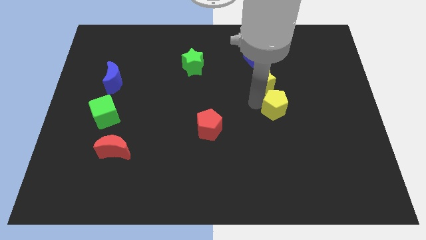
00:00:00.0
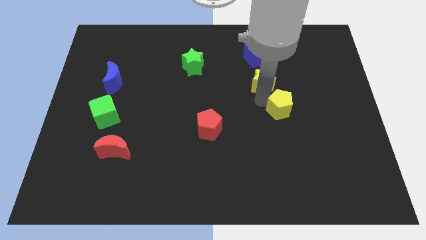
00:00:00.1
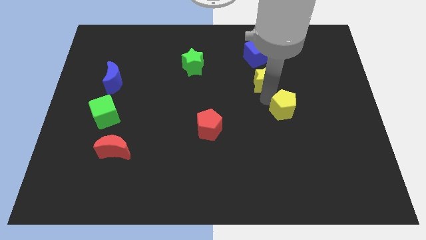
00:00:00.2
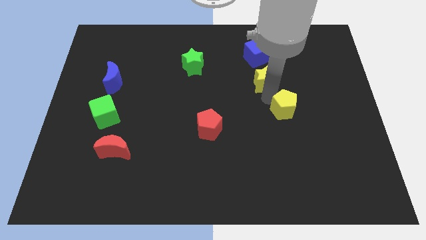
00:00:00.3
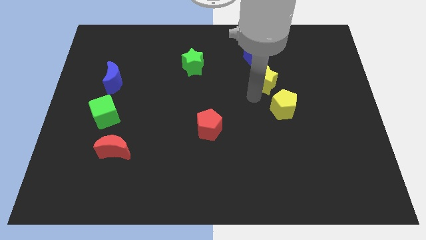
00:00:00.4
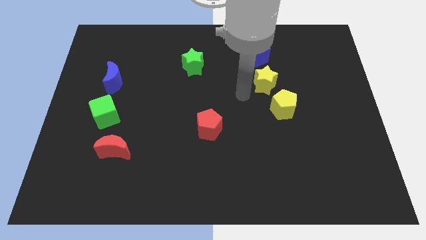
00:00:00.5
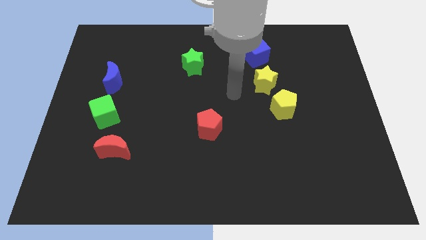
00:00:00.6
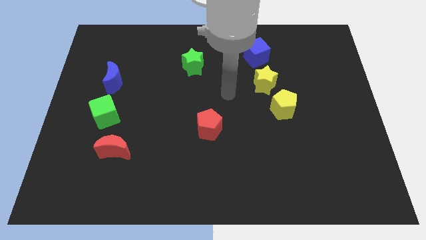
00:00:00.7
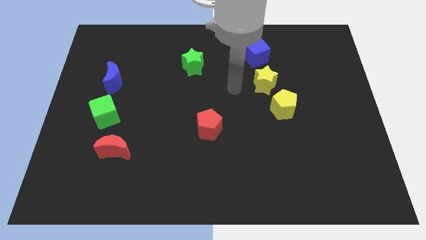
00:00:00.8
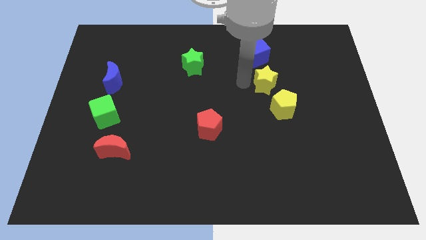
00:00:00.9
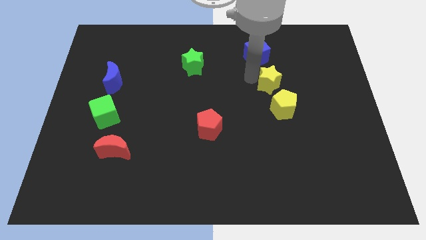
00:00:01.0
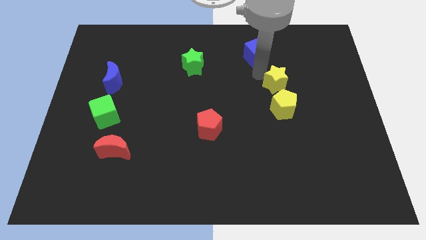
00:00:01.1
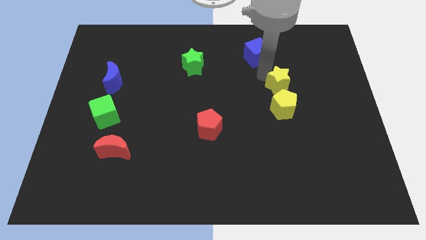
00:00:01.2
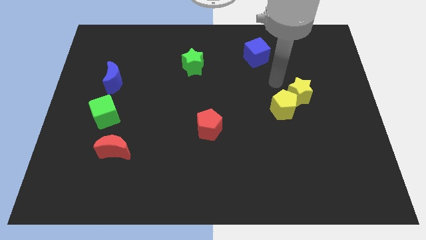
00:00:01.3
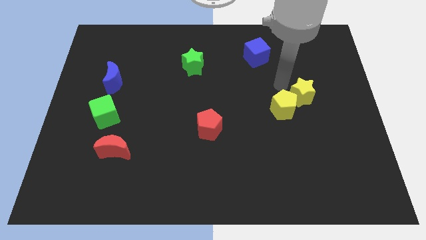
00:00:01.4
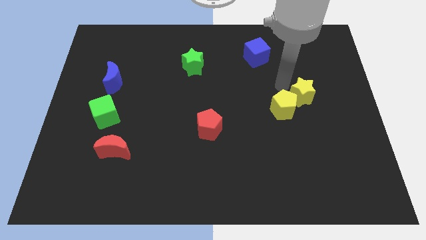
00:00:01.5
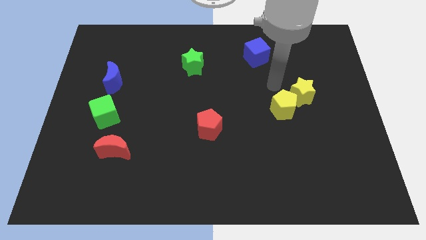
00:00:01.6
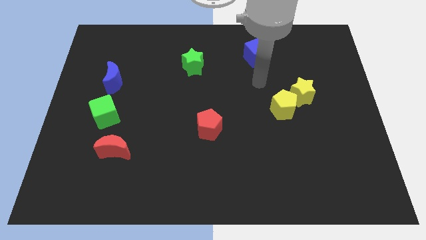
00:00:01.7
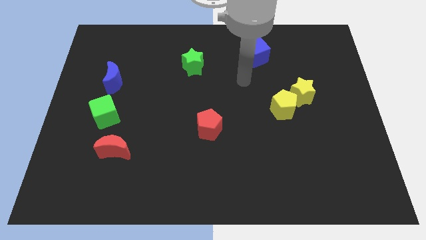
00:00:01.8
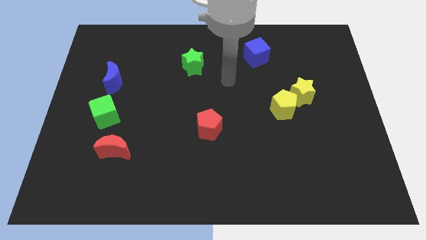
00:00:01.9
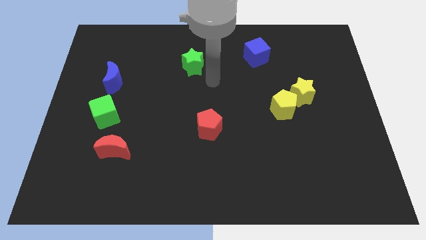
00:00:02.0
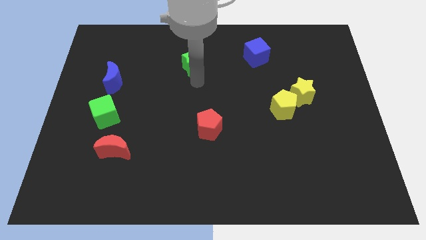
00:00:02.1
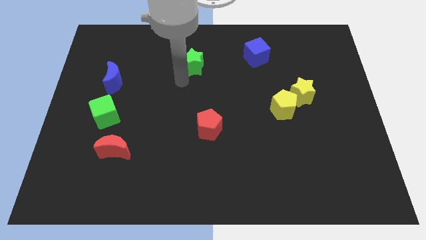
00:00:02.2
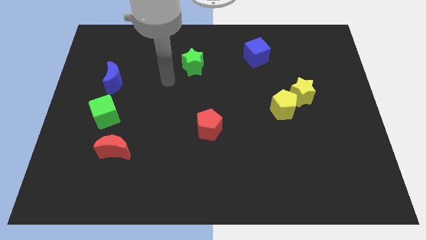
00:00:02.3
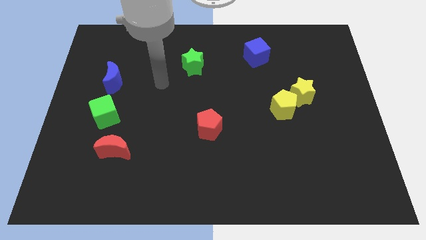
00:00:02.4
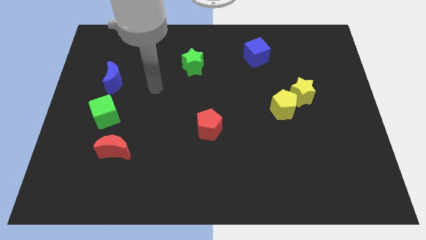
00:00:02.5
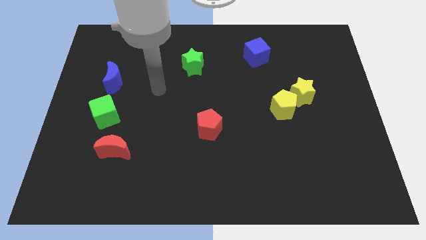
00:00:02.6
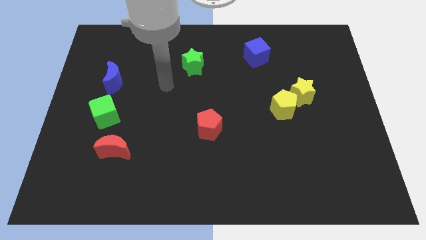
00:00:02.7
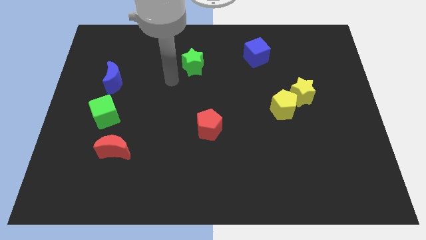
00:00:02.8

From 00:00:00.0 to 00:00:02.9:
slightly push both the yellow blocks to the right side

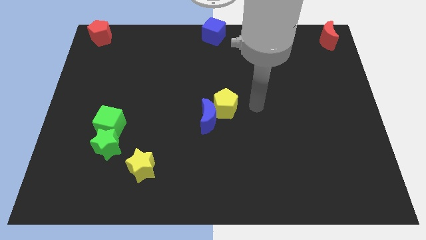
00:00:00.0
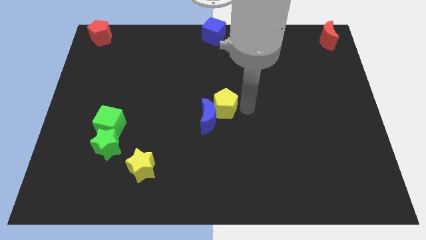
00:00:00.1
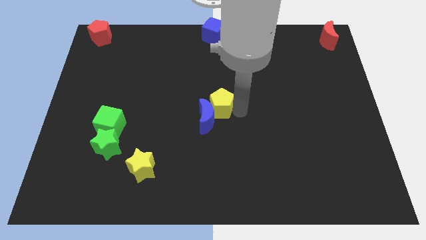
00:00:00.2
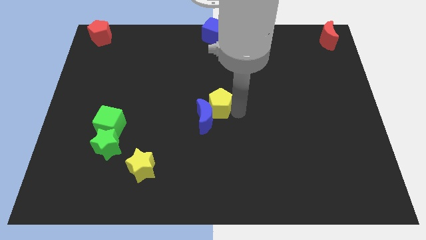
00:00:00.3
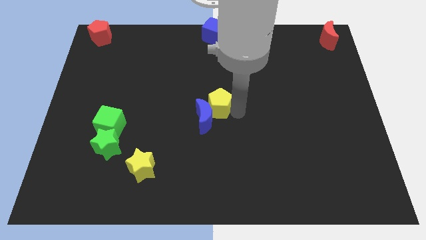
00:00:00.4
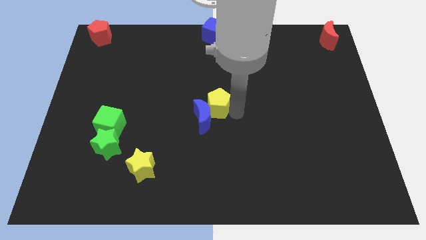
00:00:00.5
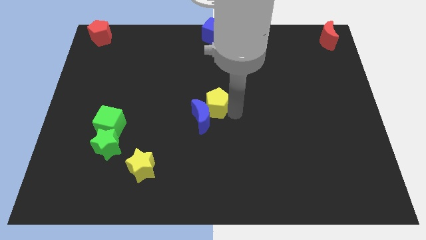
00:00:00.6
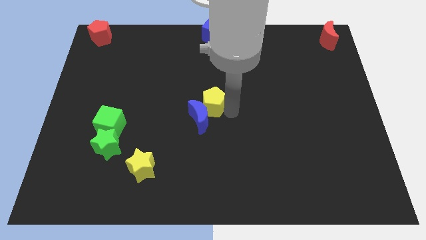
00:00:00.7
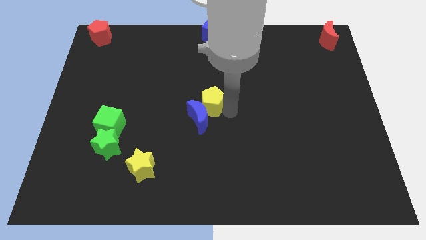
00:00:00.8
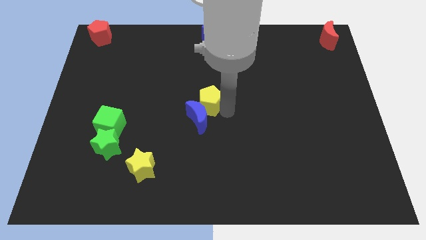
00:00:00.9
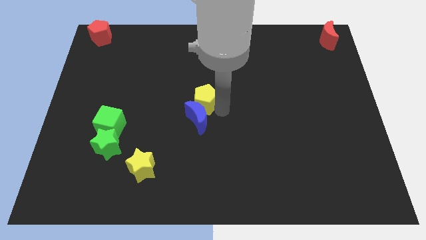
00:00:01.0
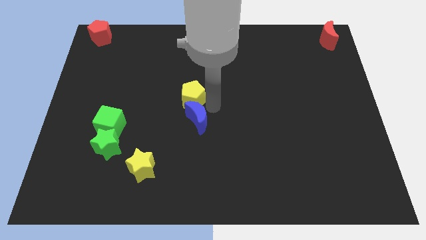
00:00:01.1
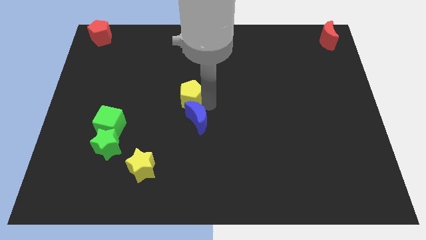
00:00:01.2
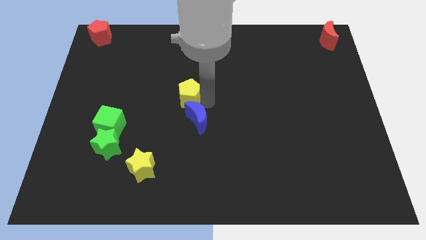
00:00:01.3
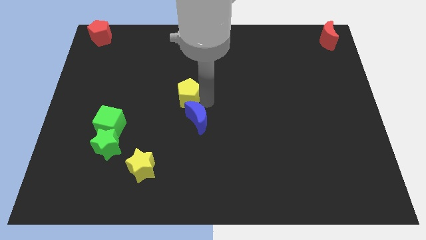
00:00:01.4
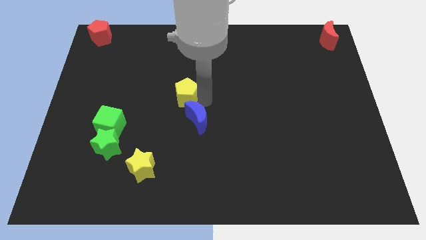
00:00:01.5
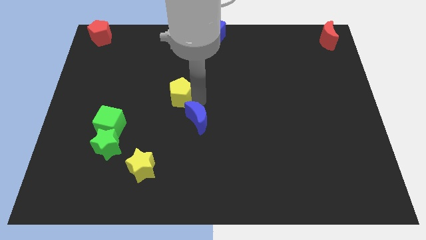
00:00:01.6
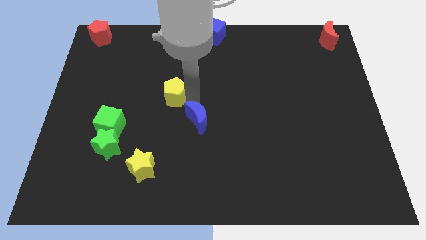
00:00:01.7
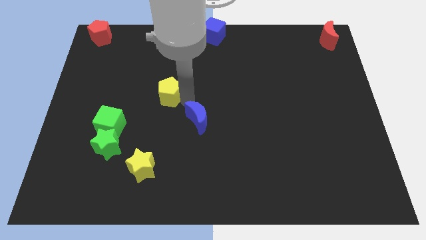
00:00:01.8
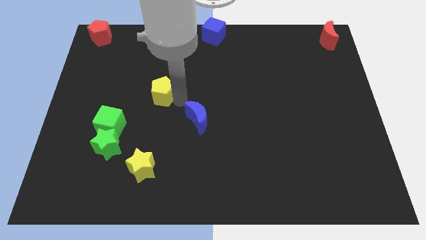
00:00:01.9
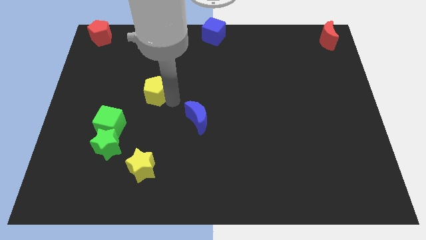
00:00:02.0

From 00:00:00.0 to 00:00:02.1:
move the yellow pentagon to the top left of the blue crescent

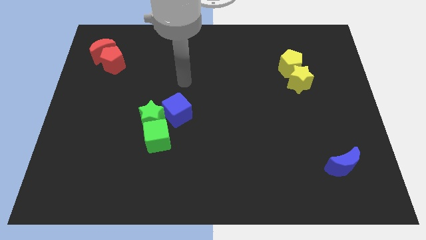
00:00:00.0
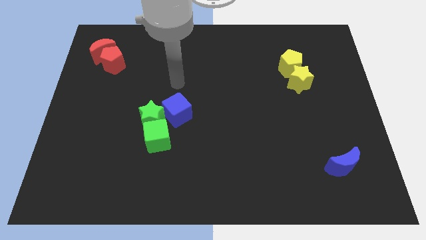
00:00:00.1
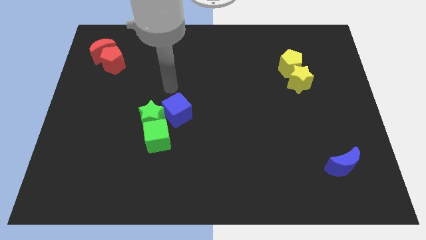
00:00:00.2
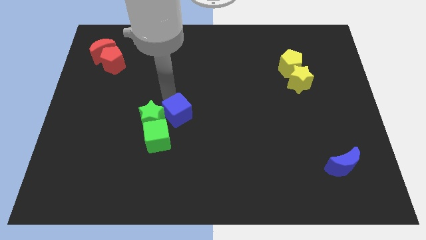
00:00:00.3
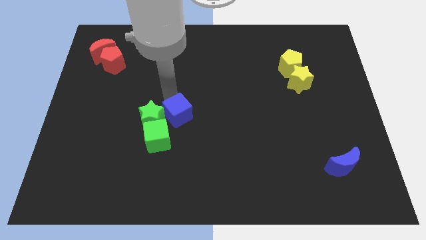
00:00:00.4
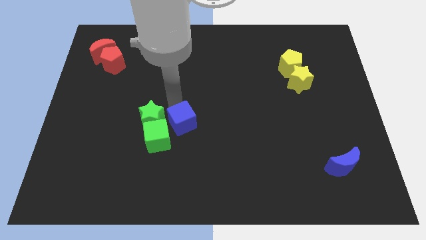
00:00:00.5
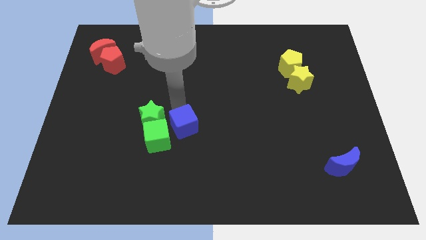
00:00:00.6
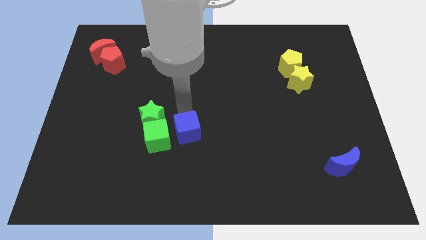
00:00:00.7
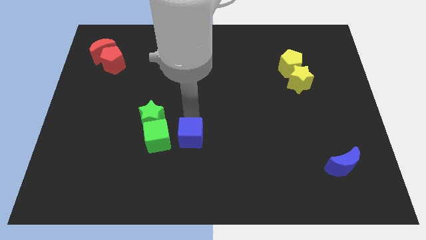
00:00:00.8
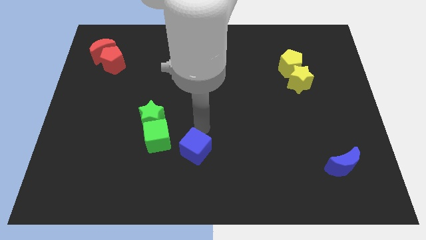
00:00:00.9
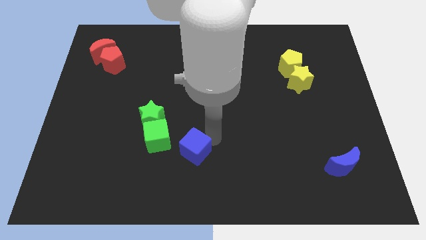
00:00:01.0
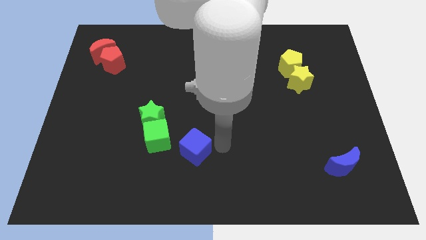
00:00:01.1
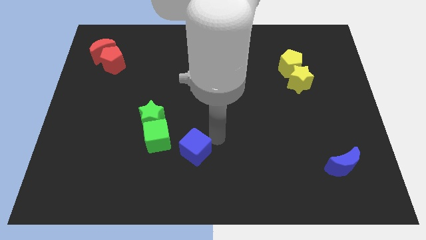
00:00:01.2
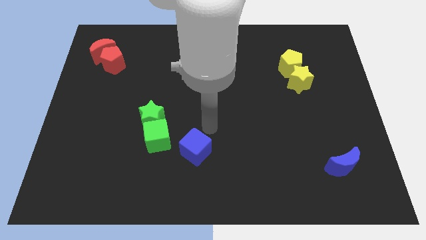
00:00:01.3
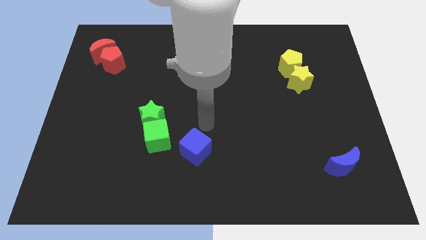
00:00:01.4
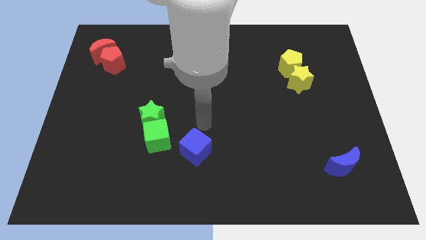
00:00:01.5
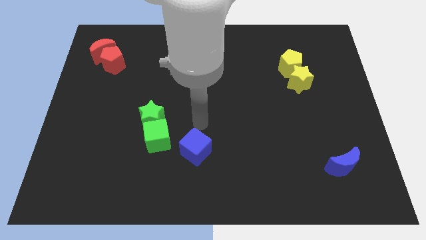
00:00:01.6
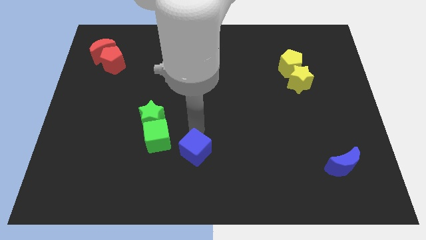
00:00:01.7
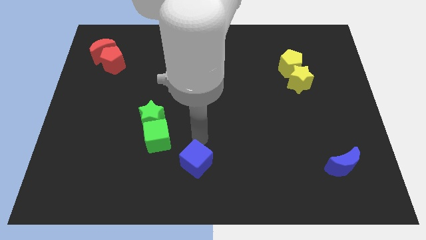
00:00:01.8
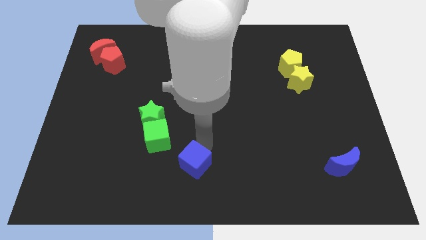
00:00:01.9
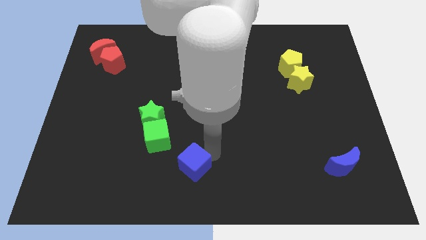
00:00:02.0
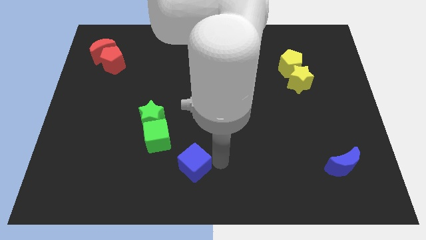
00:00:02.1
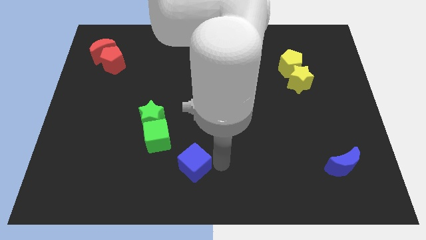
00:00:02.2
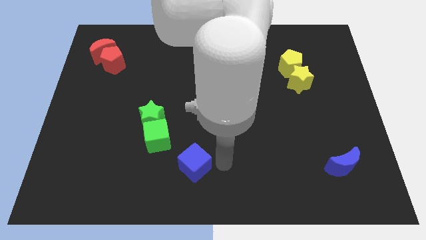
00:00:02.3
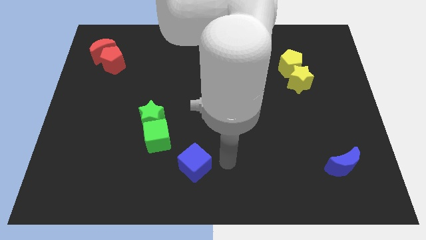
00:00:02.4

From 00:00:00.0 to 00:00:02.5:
push the blue cube towards bottom center of the board

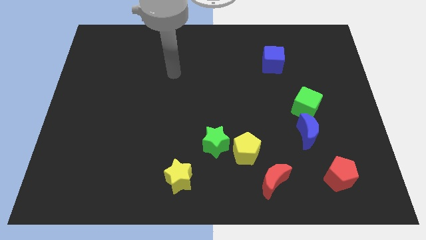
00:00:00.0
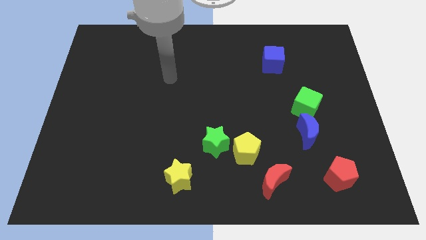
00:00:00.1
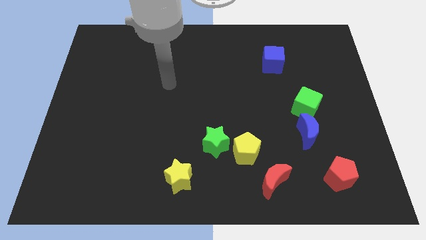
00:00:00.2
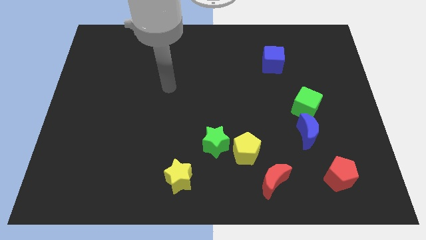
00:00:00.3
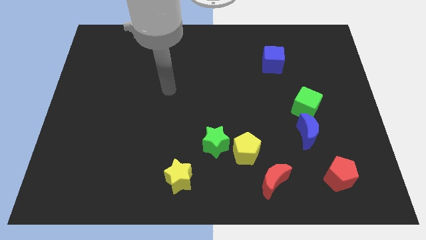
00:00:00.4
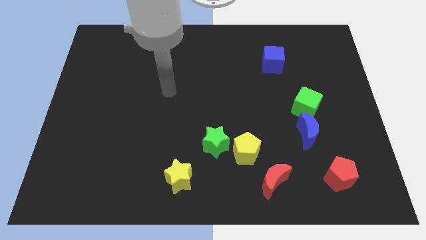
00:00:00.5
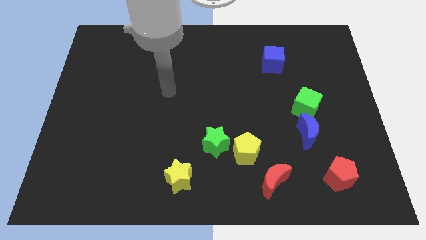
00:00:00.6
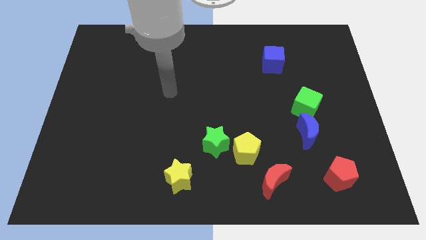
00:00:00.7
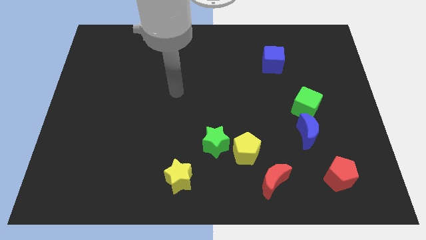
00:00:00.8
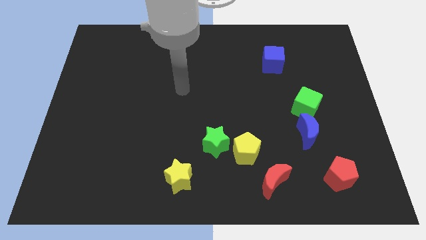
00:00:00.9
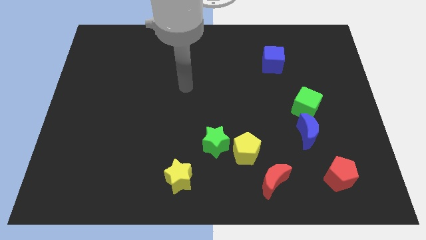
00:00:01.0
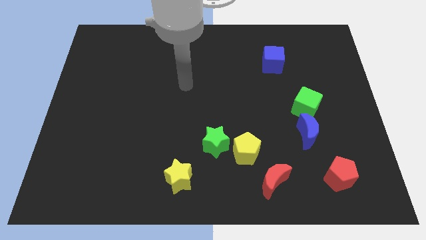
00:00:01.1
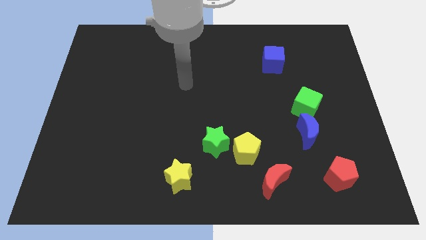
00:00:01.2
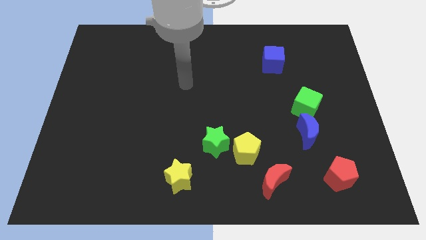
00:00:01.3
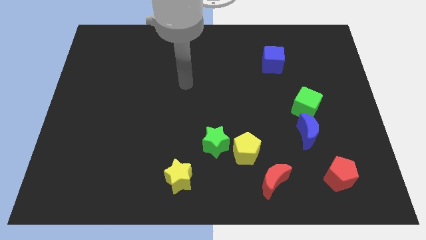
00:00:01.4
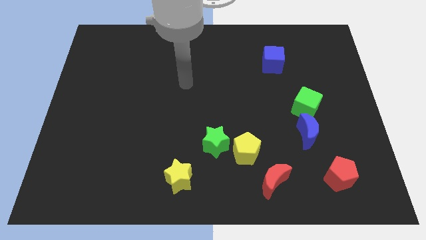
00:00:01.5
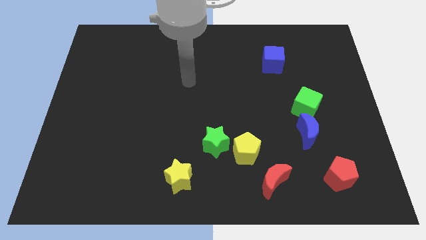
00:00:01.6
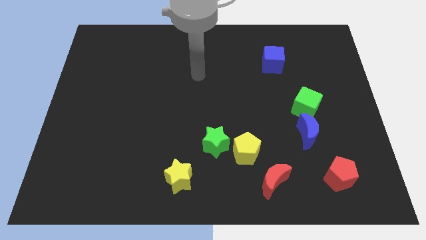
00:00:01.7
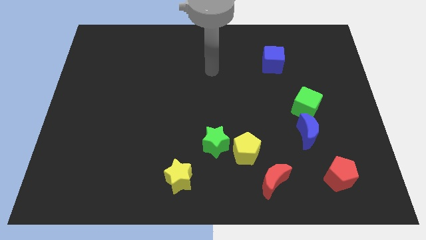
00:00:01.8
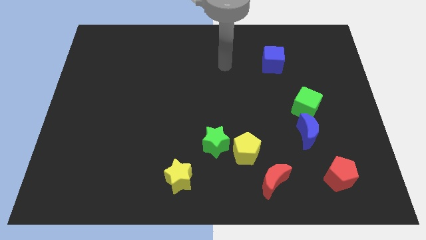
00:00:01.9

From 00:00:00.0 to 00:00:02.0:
point the arm above the green star
